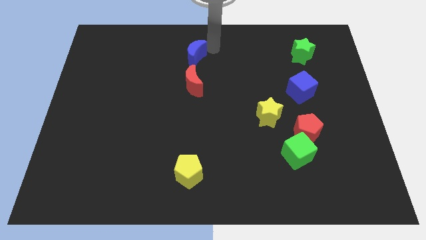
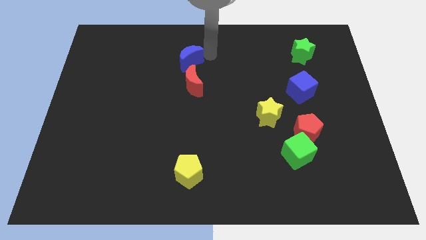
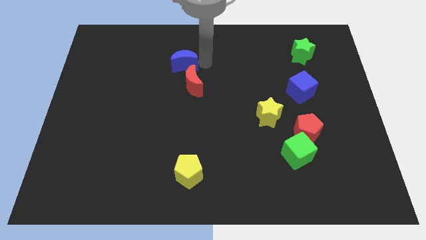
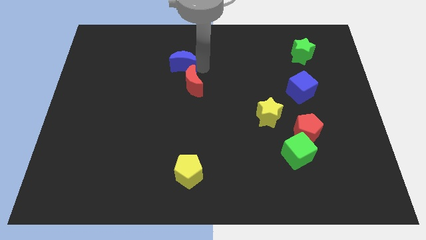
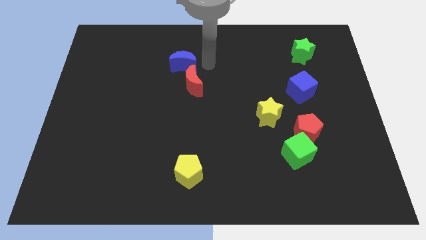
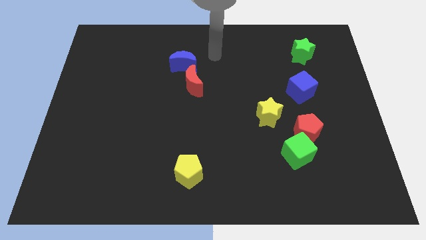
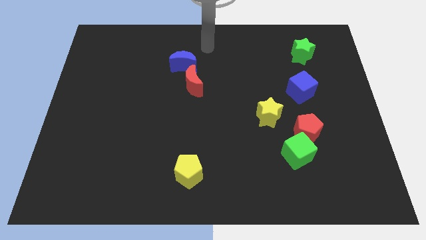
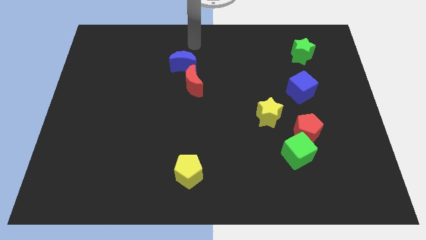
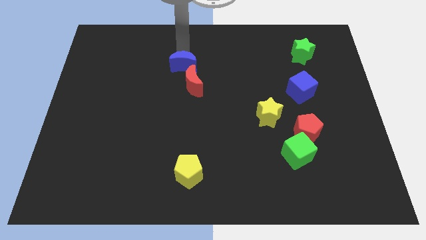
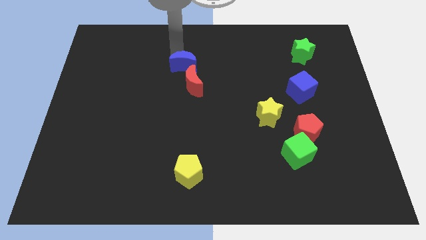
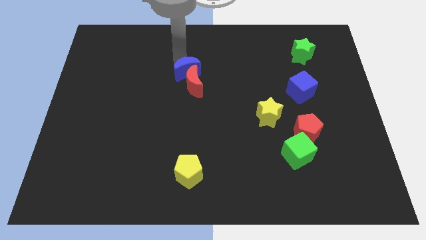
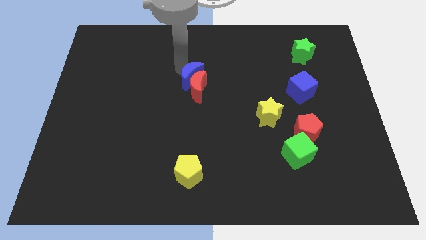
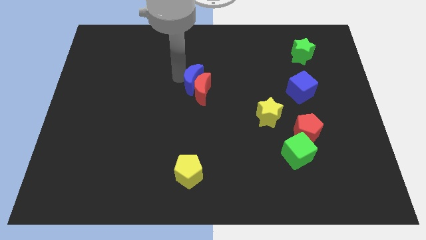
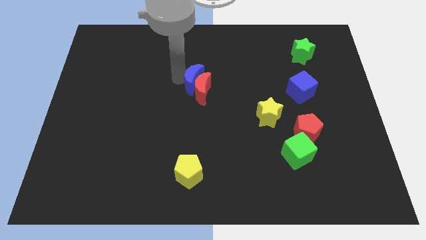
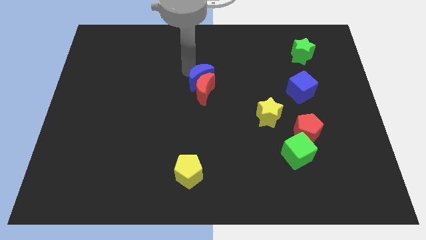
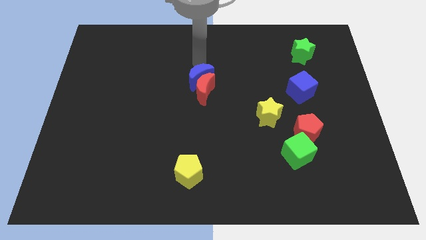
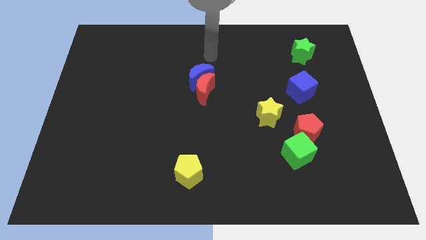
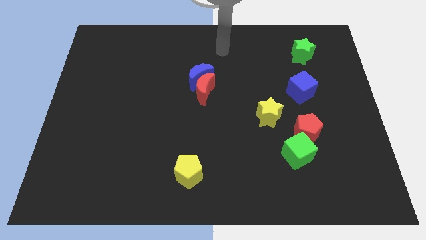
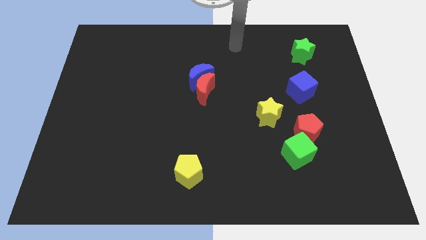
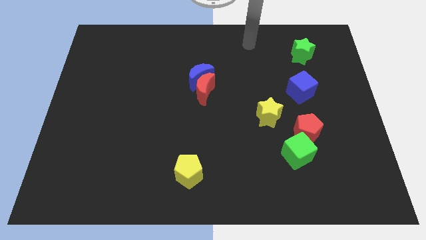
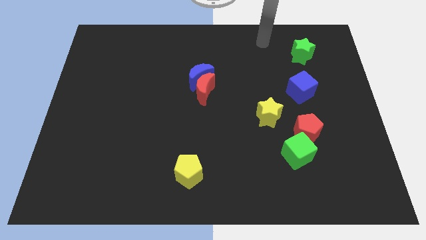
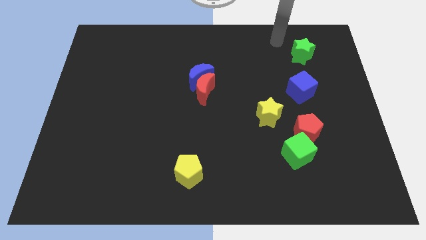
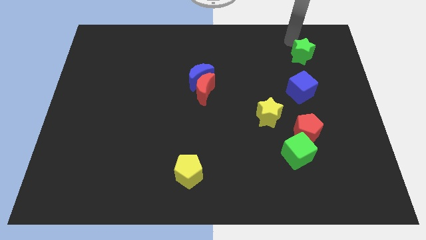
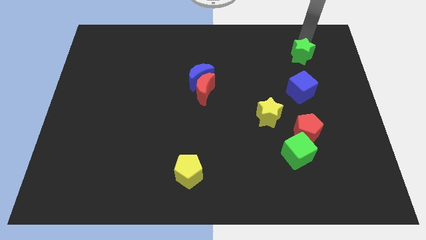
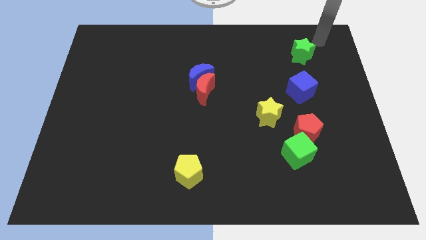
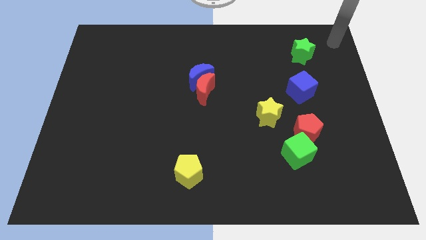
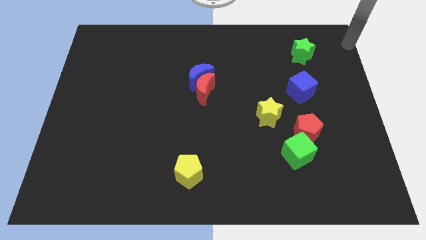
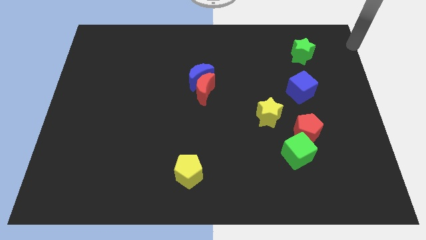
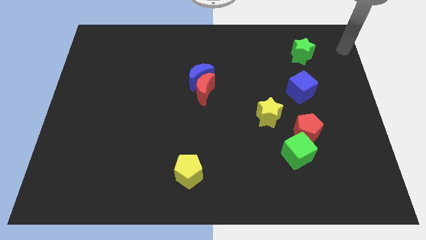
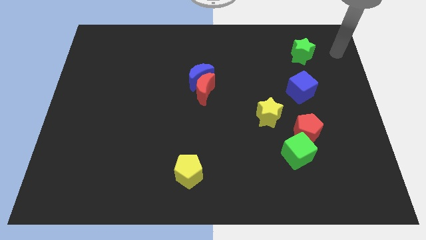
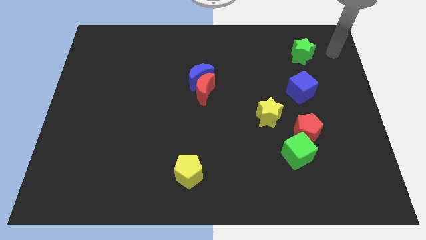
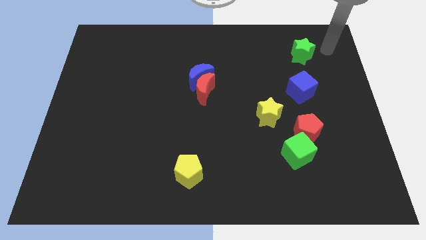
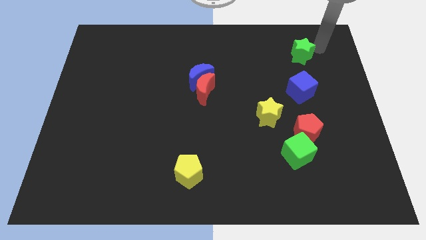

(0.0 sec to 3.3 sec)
move the blue moon into the red moon

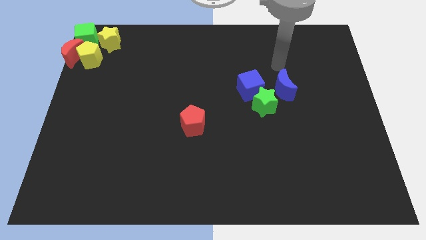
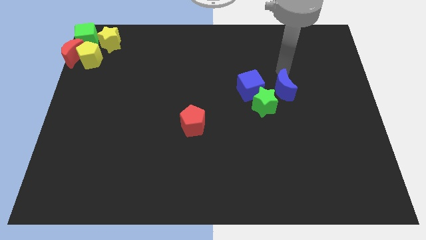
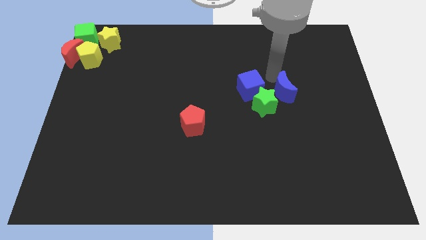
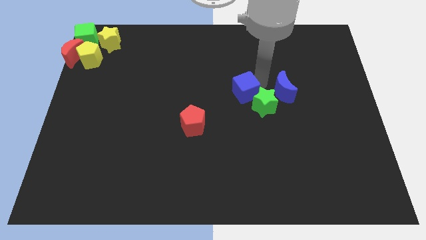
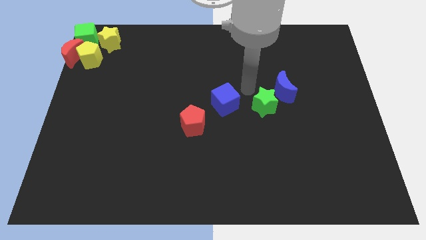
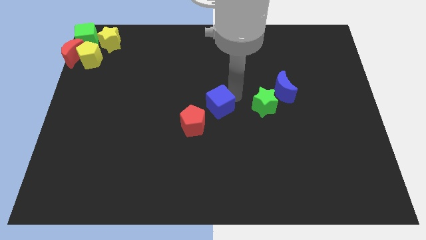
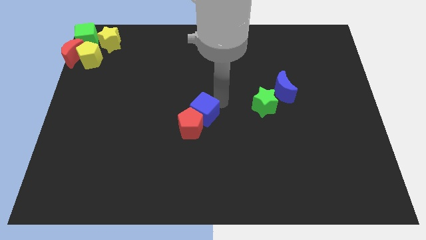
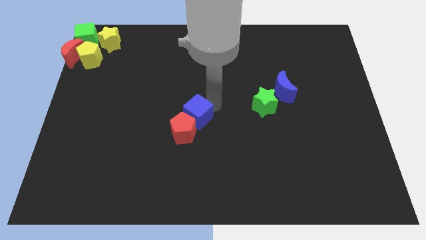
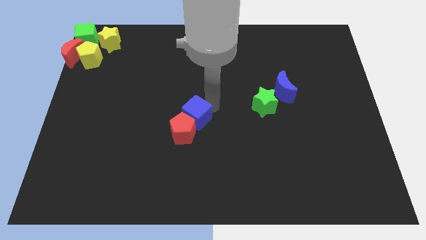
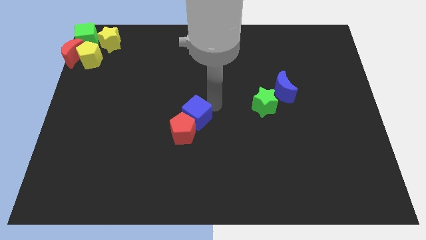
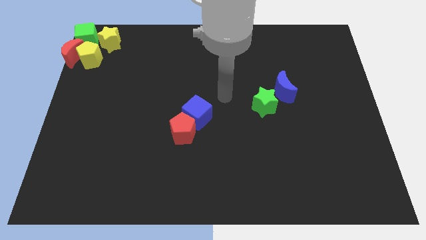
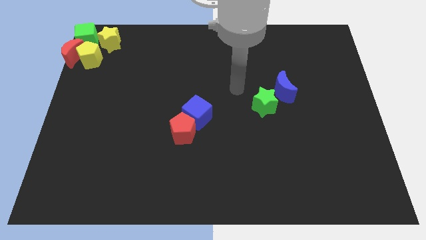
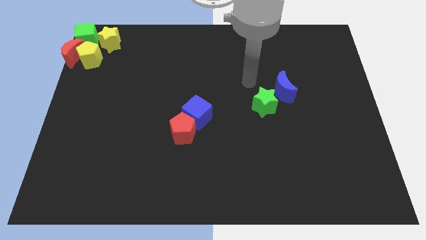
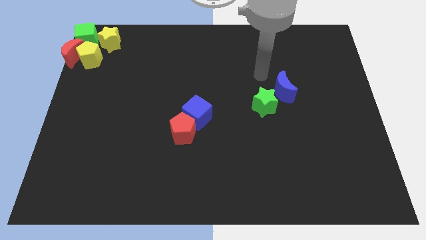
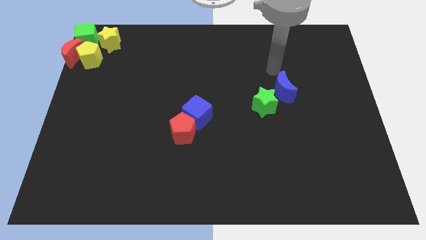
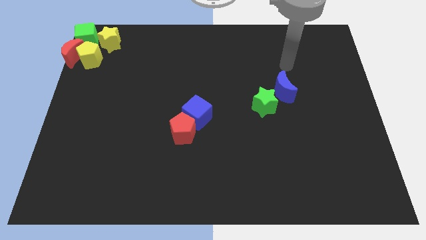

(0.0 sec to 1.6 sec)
push the blue cube into the red pentagon

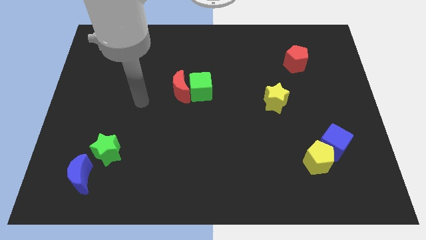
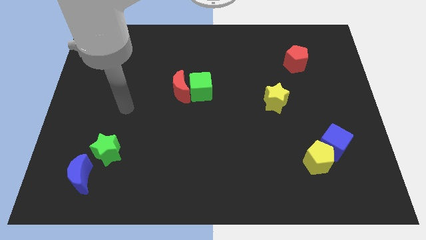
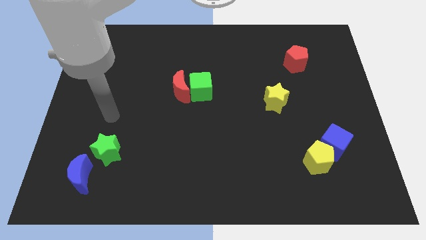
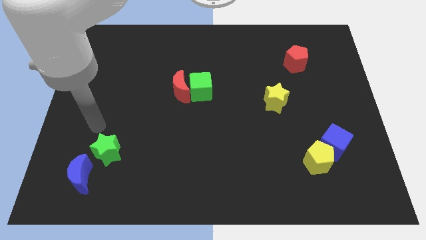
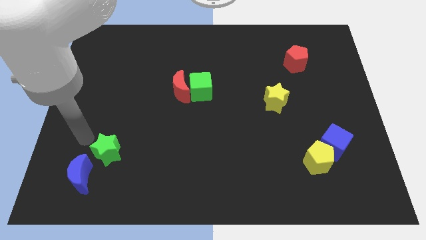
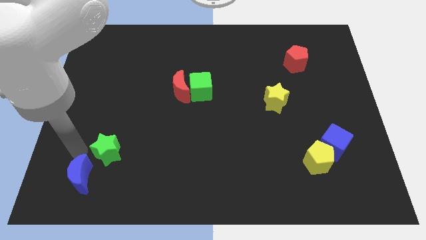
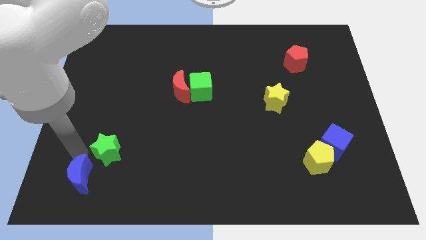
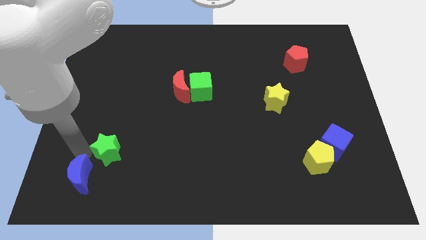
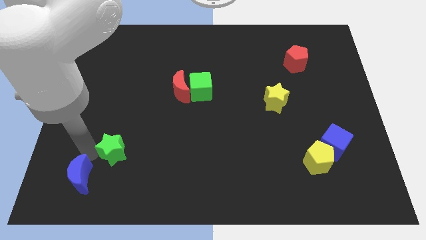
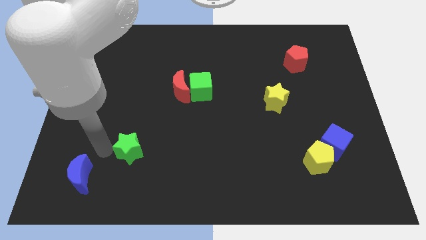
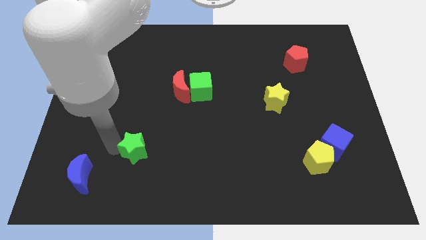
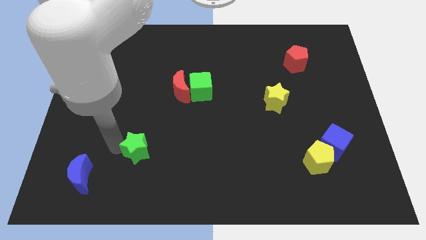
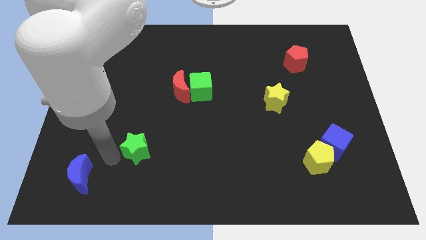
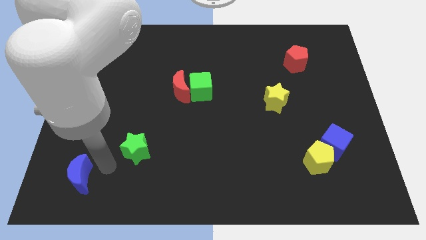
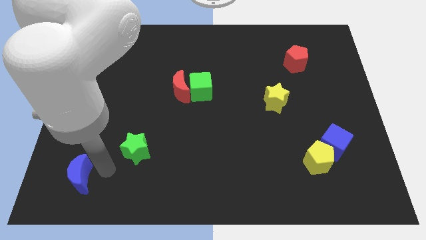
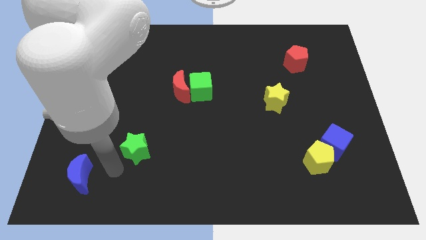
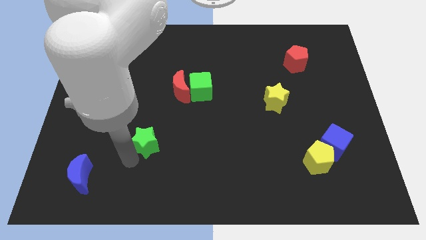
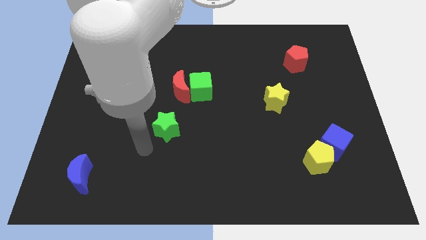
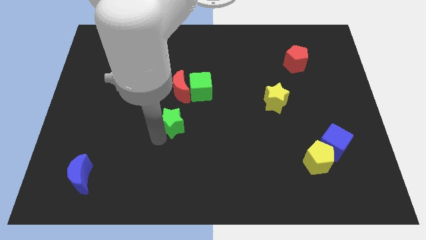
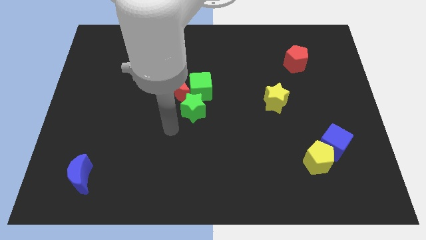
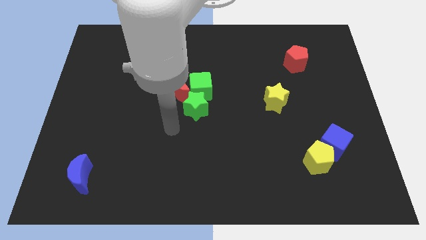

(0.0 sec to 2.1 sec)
push the green star to bottom of the green cube

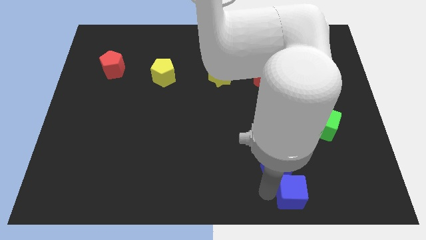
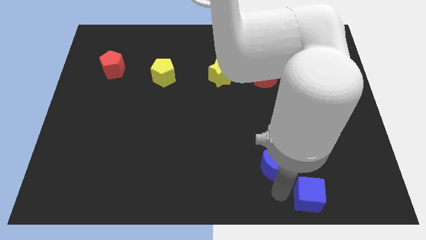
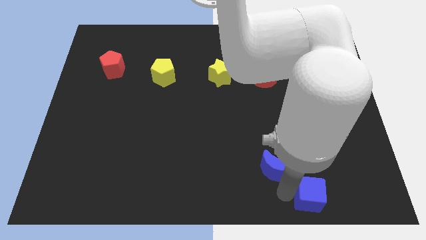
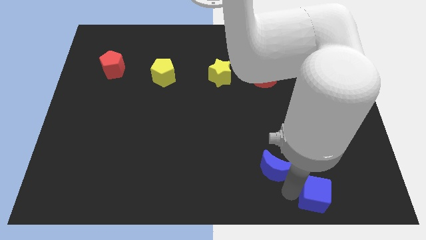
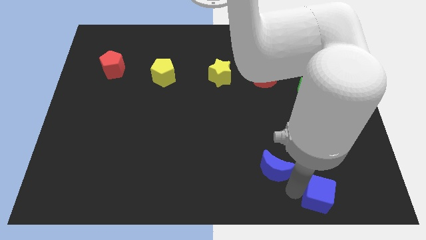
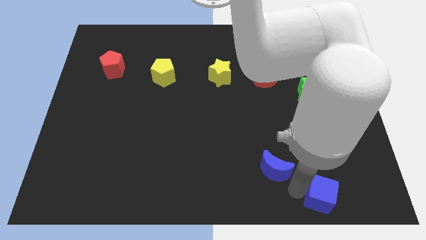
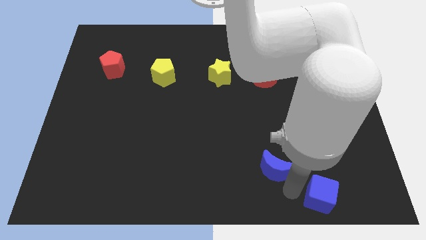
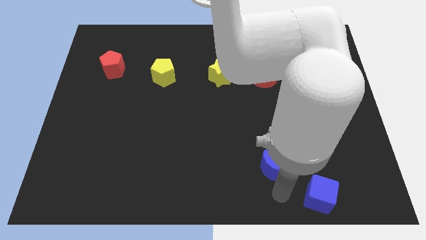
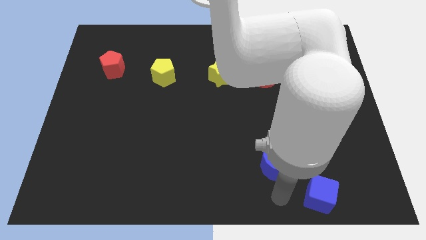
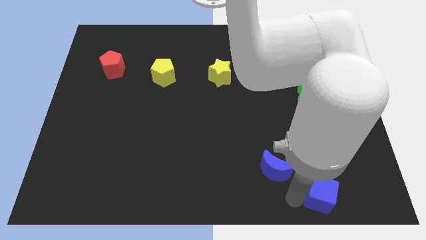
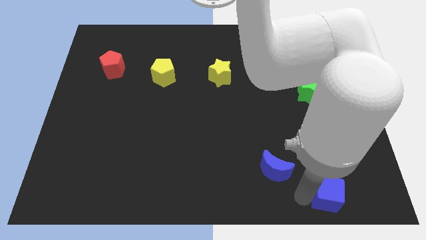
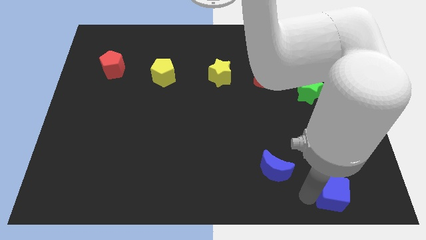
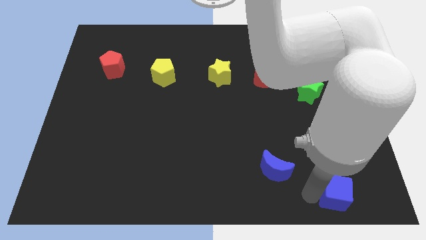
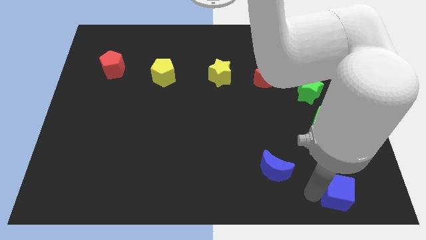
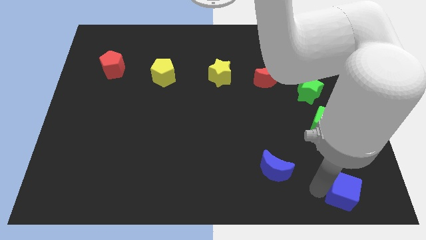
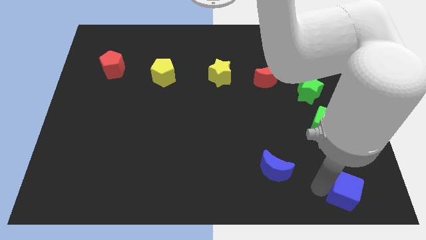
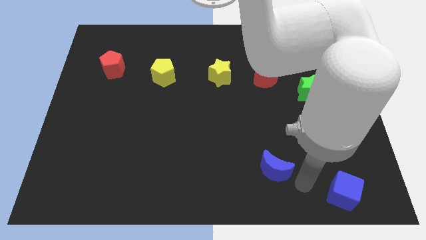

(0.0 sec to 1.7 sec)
move the blue cube towards the bottom right corner

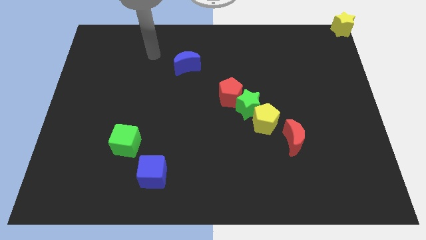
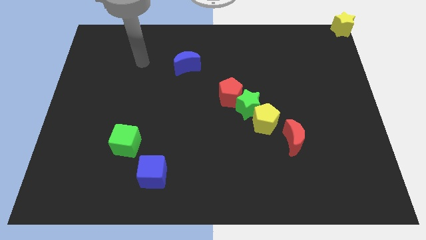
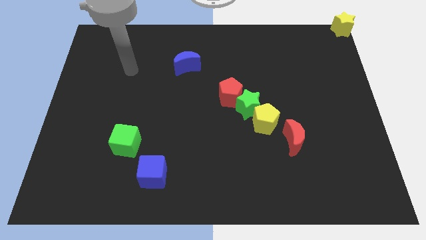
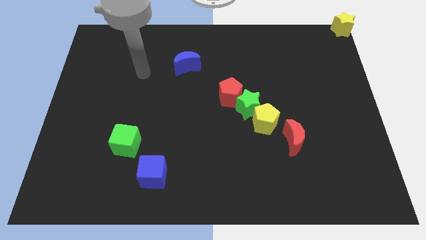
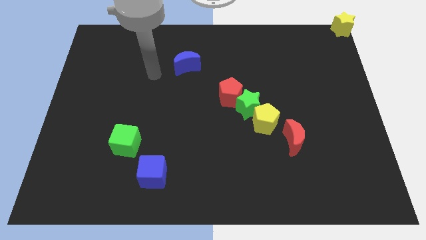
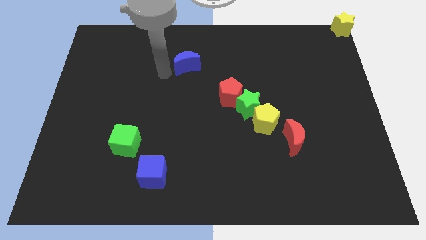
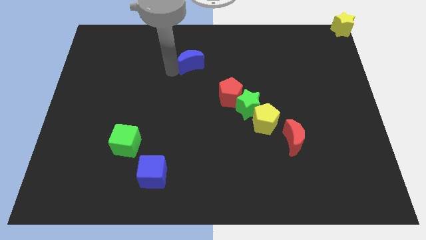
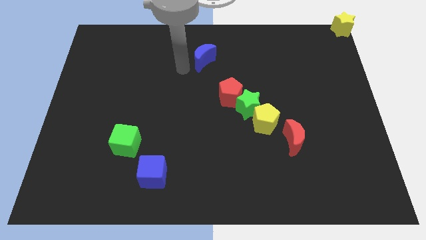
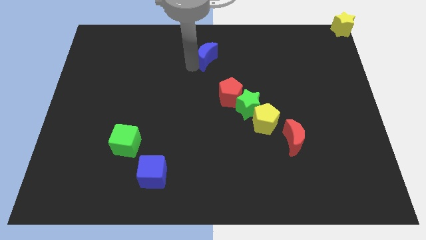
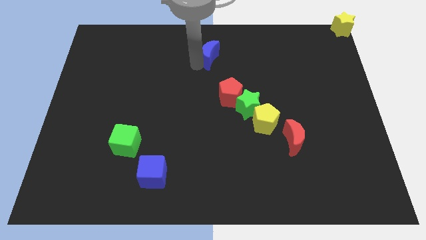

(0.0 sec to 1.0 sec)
push the blue crescent slightly to the right
